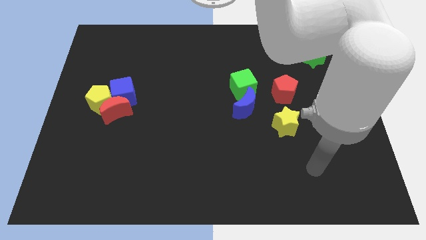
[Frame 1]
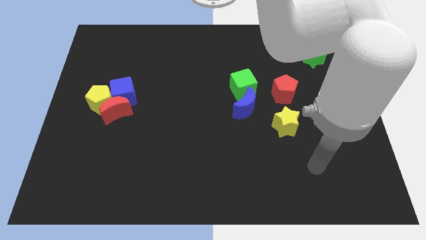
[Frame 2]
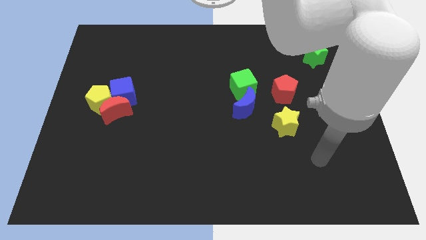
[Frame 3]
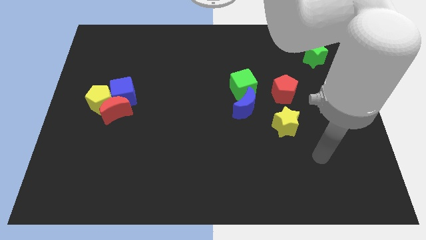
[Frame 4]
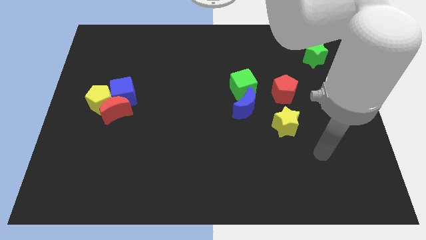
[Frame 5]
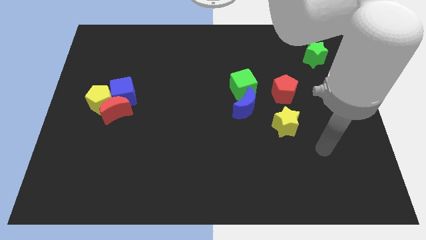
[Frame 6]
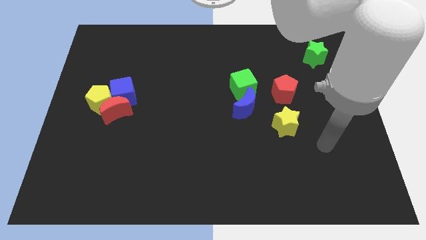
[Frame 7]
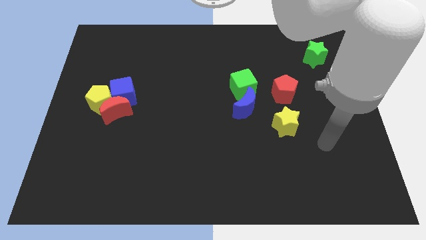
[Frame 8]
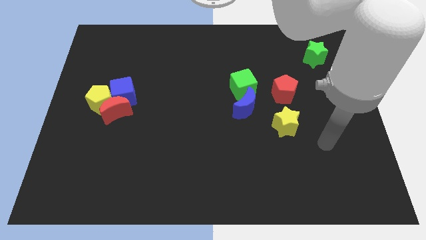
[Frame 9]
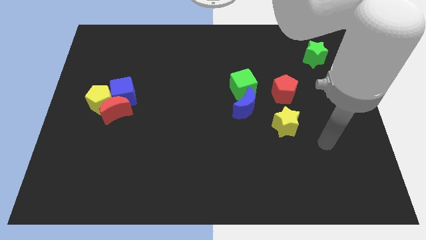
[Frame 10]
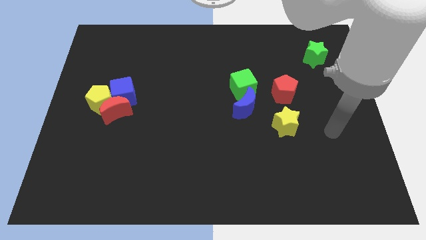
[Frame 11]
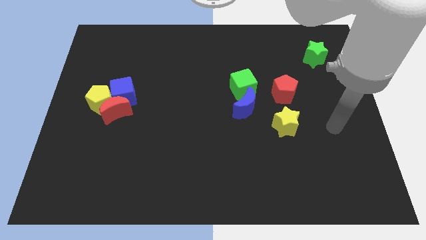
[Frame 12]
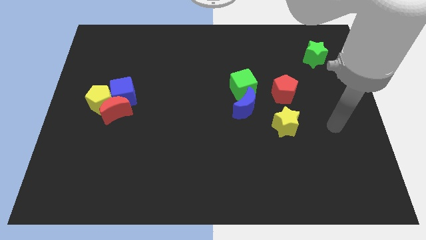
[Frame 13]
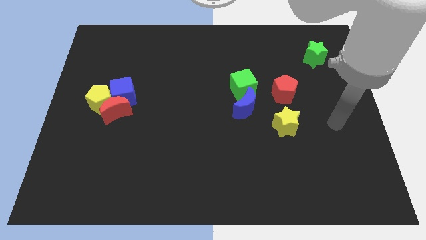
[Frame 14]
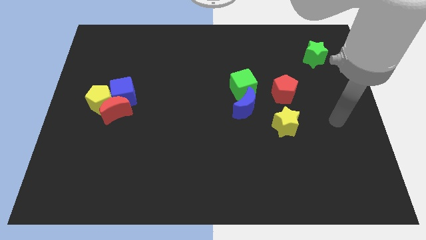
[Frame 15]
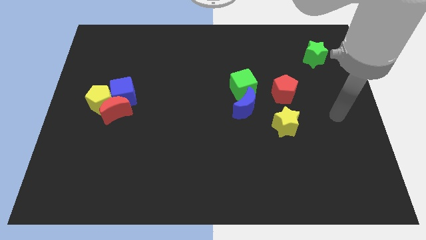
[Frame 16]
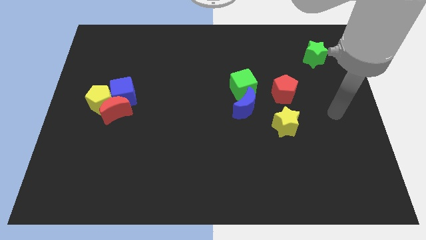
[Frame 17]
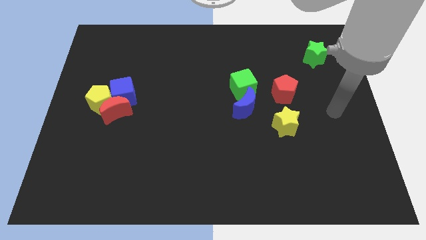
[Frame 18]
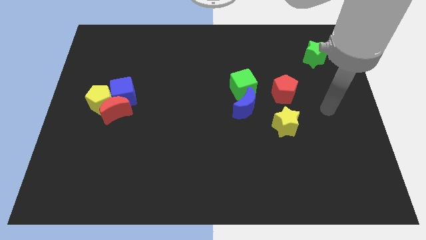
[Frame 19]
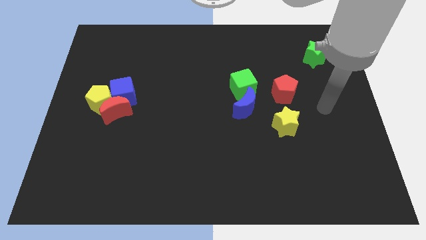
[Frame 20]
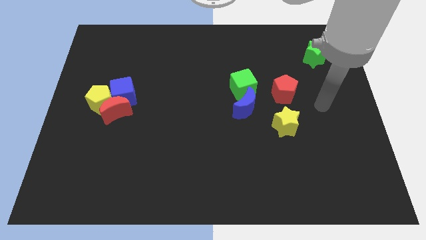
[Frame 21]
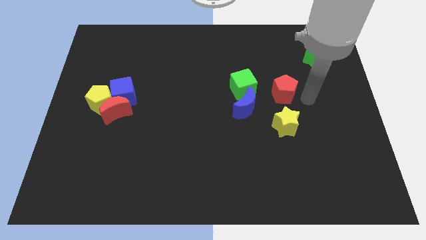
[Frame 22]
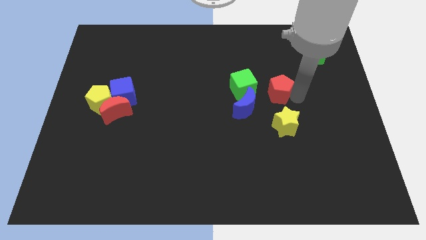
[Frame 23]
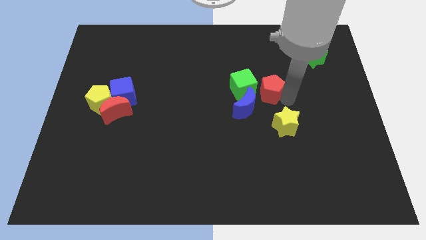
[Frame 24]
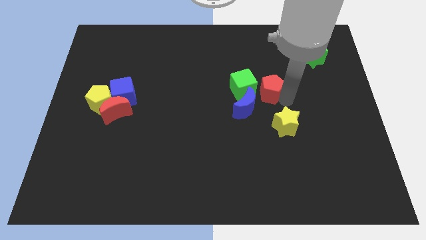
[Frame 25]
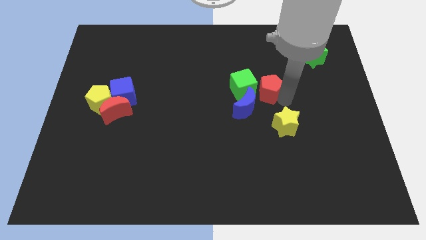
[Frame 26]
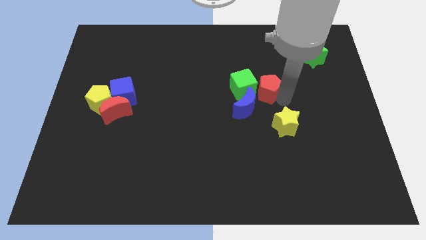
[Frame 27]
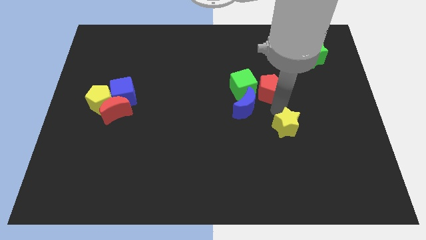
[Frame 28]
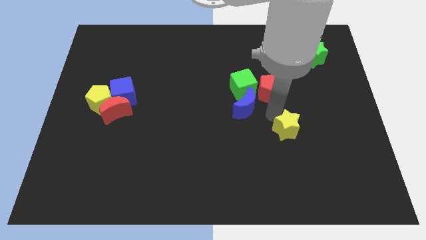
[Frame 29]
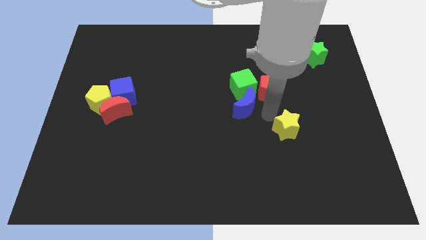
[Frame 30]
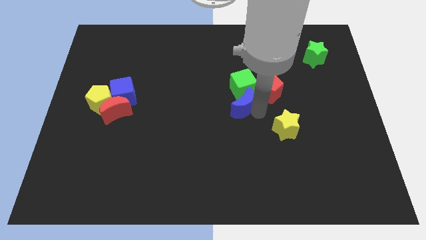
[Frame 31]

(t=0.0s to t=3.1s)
push the red pentagon close to the green cube

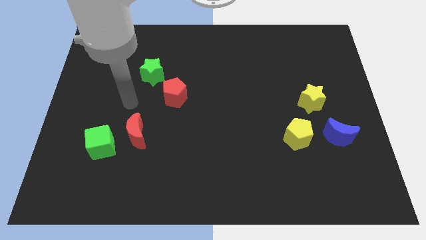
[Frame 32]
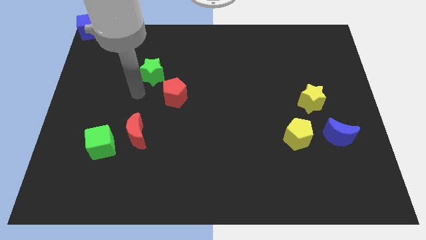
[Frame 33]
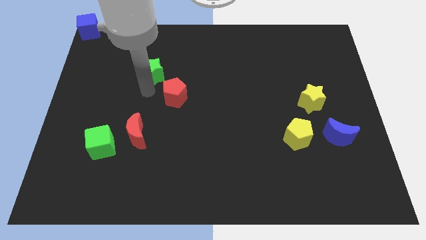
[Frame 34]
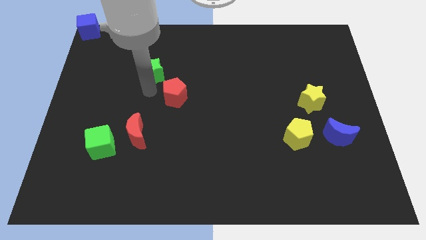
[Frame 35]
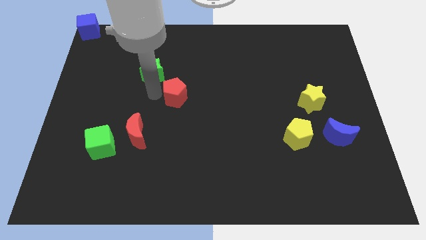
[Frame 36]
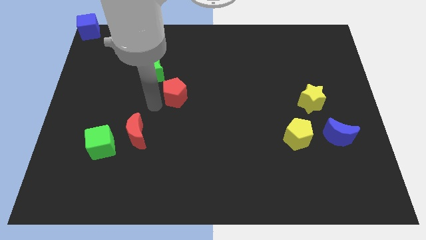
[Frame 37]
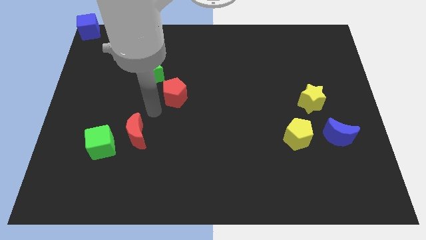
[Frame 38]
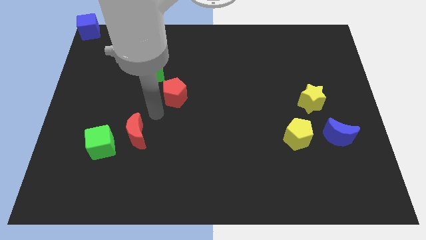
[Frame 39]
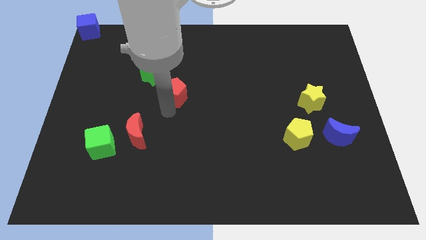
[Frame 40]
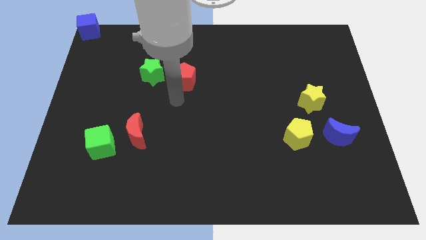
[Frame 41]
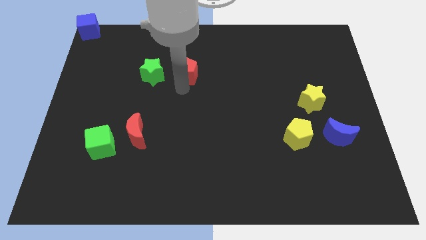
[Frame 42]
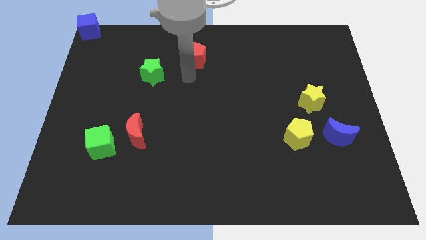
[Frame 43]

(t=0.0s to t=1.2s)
put the red pentagon at the right side of the green star

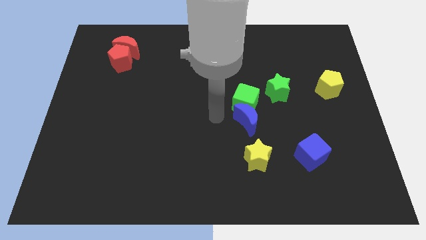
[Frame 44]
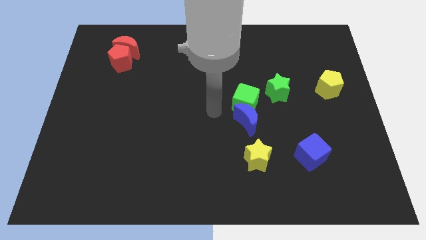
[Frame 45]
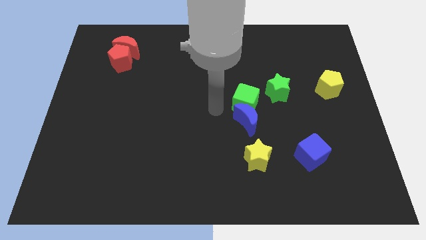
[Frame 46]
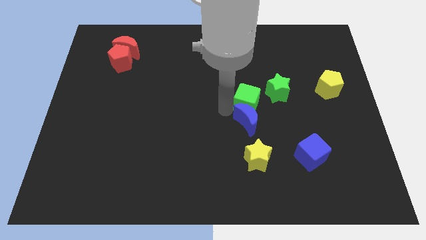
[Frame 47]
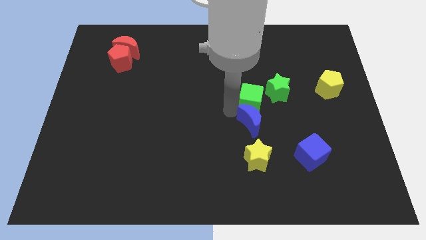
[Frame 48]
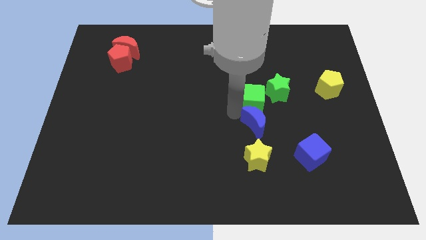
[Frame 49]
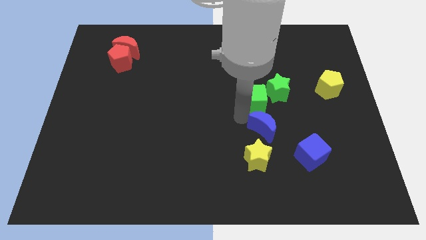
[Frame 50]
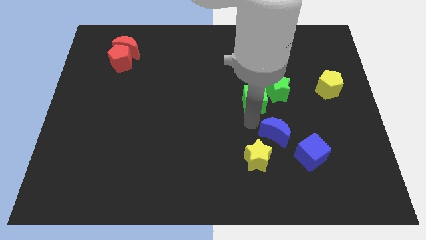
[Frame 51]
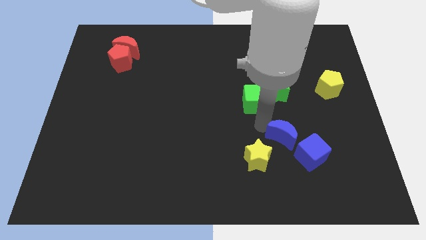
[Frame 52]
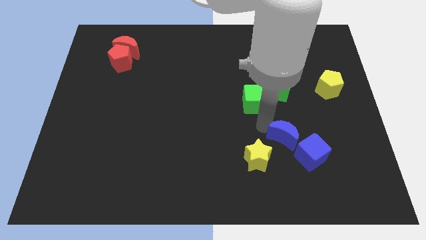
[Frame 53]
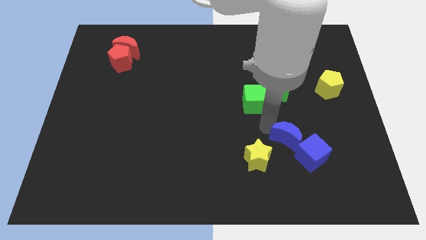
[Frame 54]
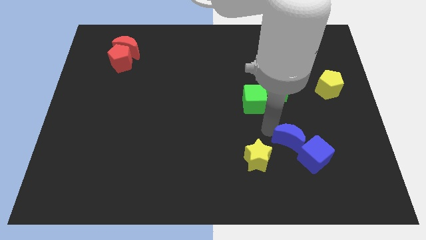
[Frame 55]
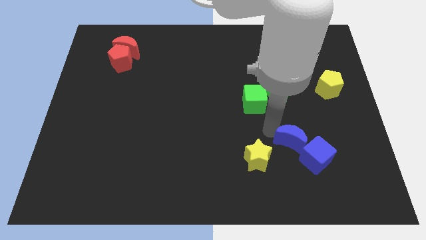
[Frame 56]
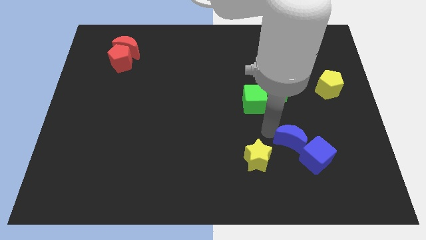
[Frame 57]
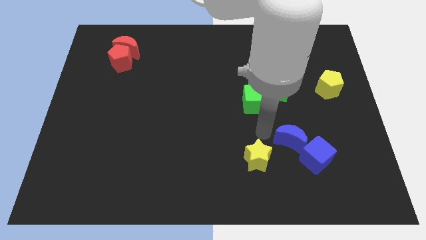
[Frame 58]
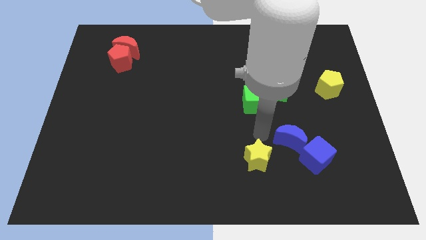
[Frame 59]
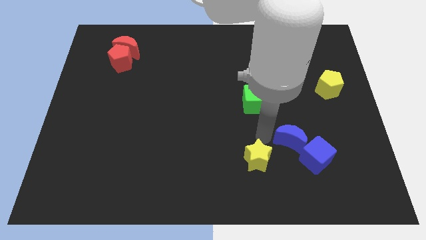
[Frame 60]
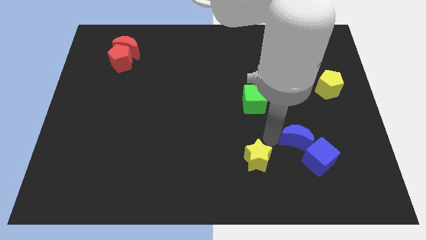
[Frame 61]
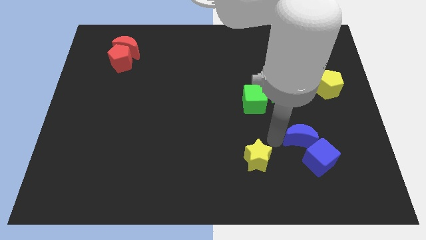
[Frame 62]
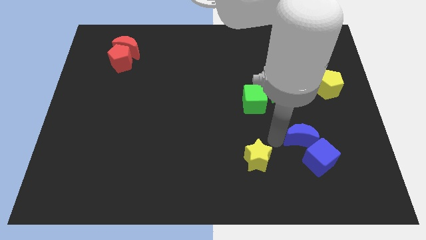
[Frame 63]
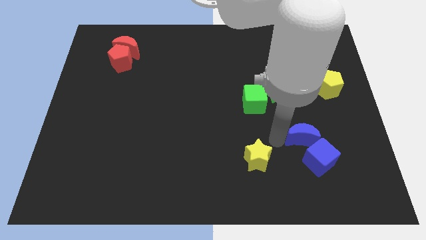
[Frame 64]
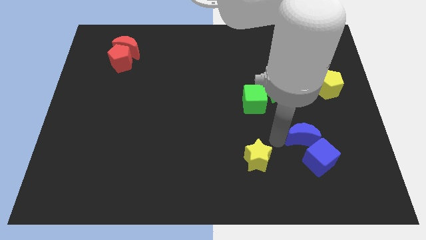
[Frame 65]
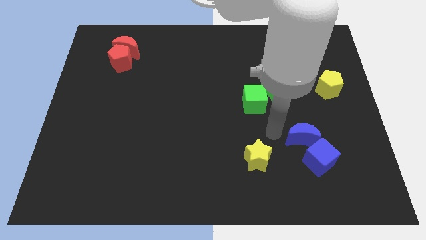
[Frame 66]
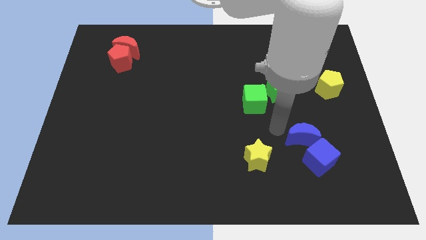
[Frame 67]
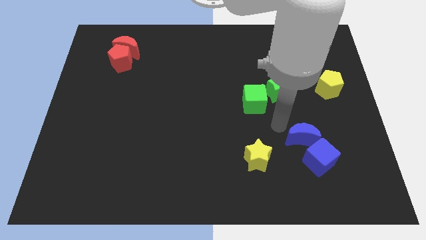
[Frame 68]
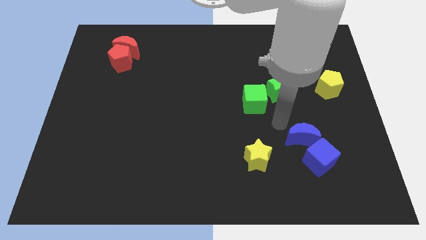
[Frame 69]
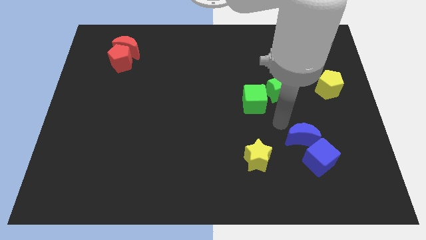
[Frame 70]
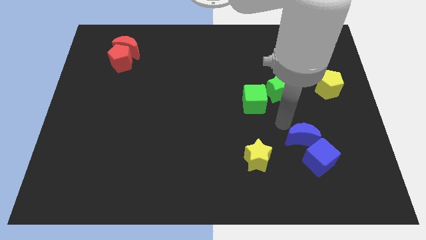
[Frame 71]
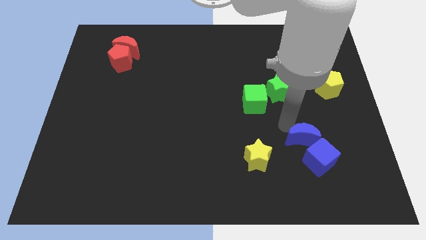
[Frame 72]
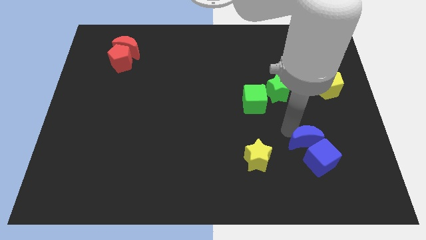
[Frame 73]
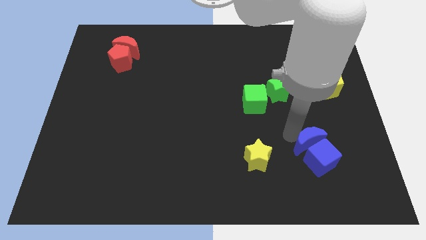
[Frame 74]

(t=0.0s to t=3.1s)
separate the blue moon from the green cube

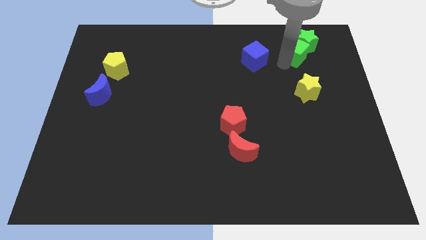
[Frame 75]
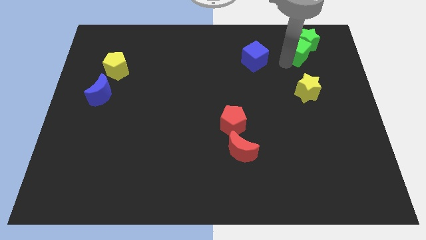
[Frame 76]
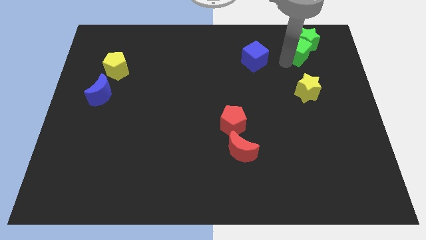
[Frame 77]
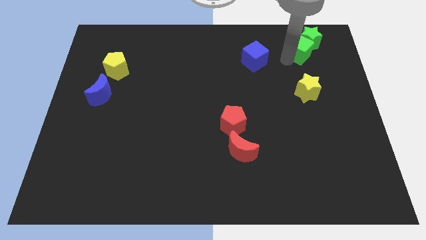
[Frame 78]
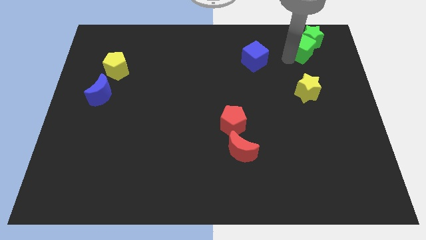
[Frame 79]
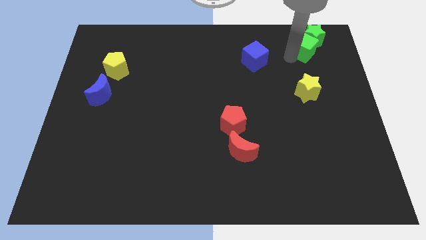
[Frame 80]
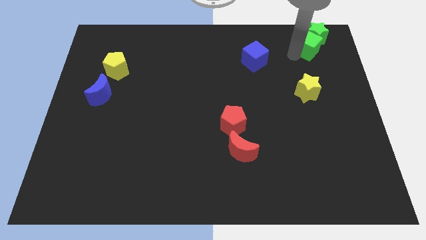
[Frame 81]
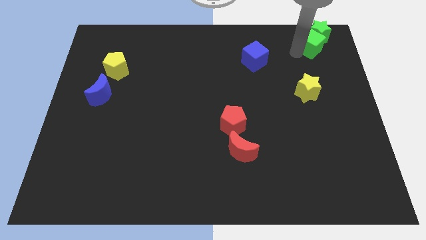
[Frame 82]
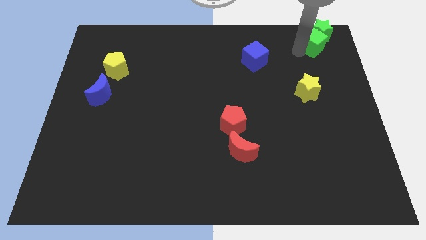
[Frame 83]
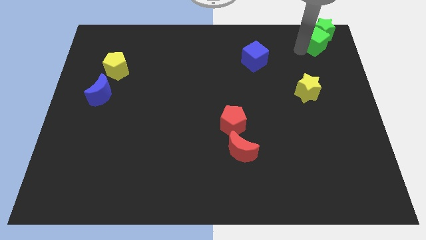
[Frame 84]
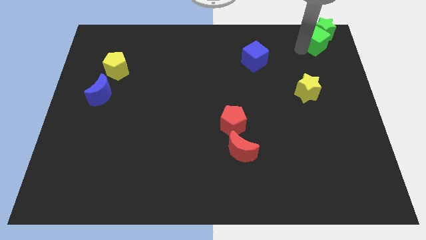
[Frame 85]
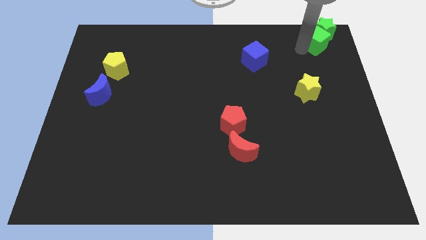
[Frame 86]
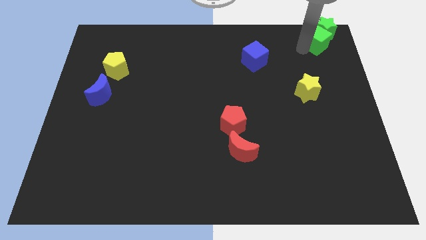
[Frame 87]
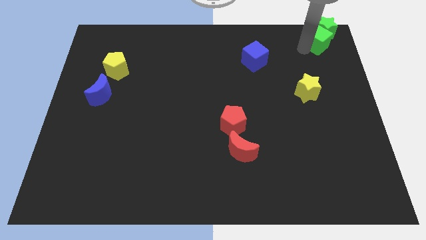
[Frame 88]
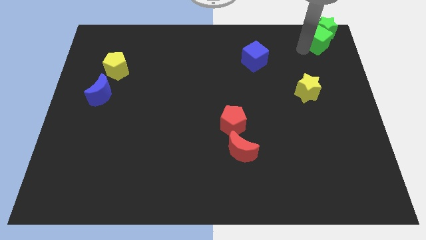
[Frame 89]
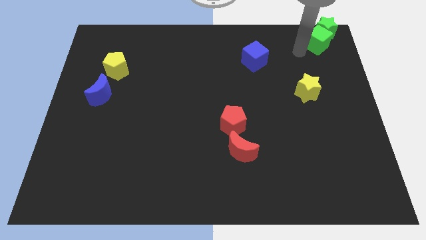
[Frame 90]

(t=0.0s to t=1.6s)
push the green blocks to the top right corner of the board

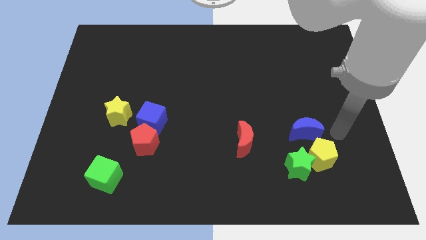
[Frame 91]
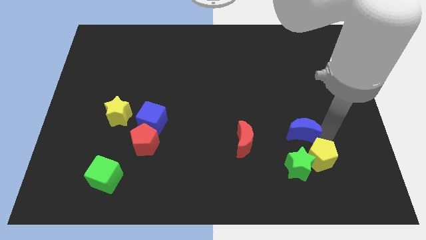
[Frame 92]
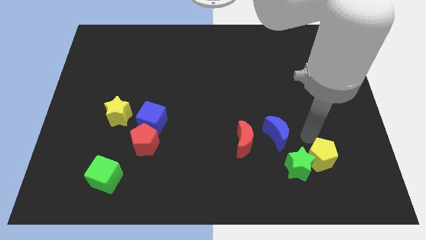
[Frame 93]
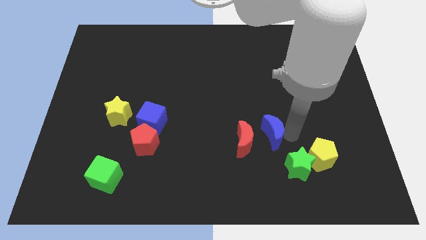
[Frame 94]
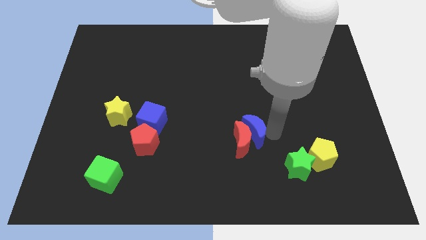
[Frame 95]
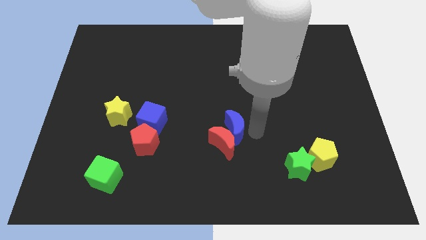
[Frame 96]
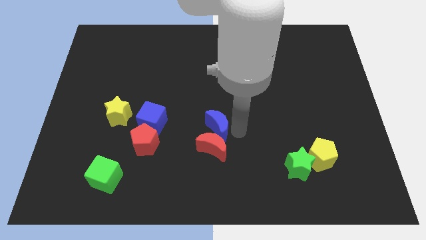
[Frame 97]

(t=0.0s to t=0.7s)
push the red moon with blue moon
